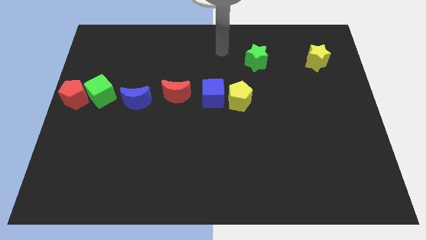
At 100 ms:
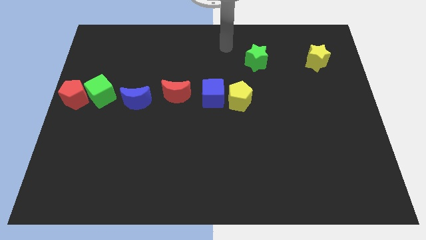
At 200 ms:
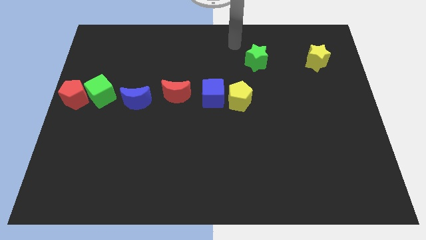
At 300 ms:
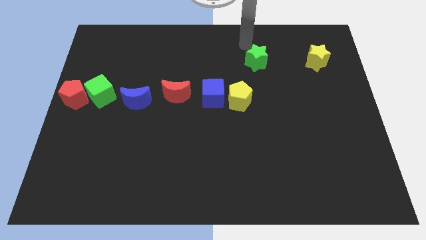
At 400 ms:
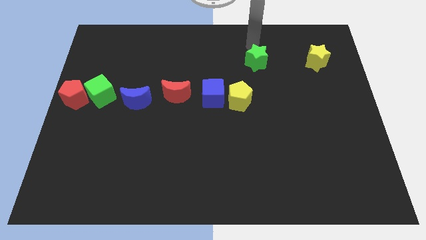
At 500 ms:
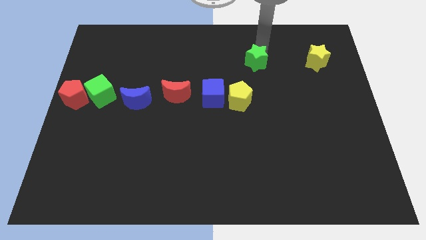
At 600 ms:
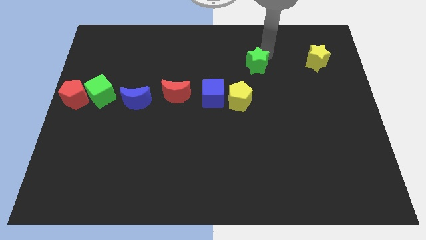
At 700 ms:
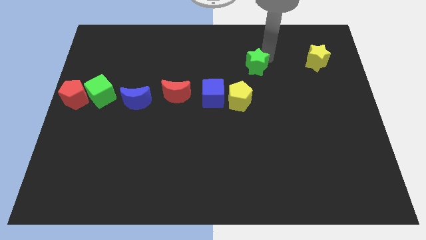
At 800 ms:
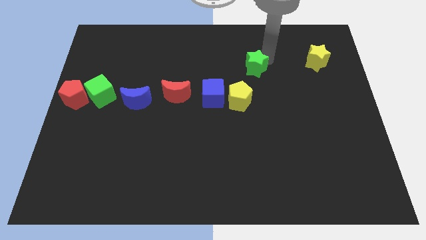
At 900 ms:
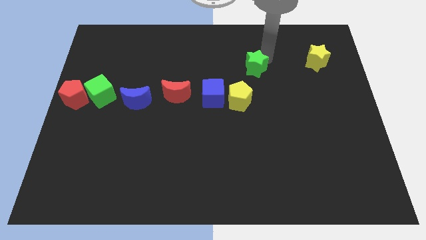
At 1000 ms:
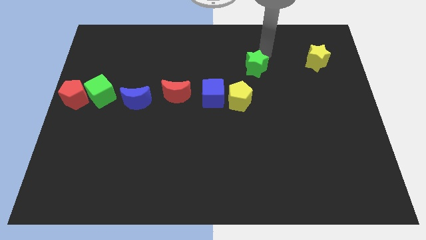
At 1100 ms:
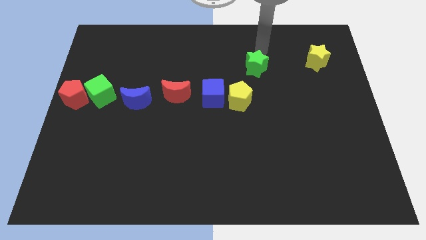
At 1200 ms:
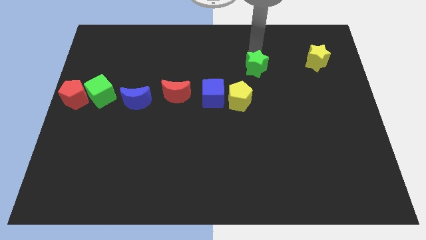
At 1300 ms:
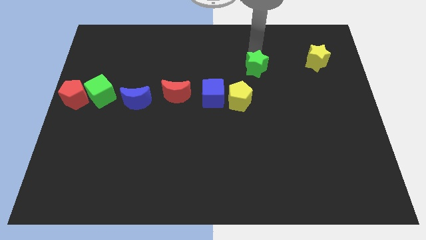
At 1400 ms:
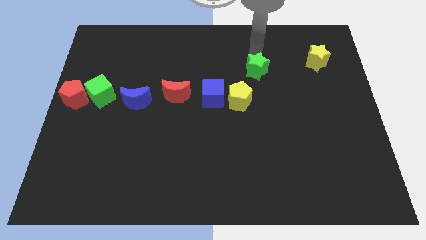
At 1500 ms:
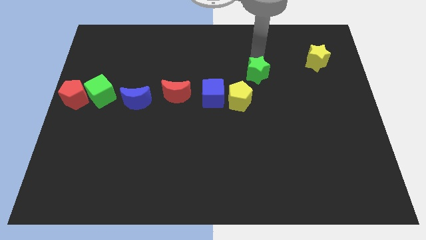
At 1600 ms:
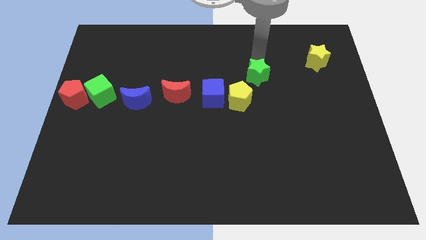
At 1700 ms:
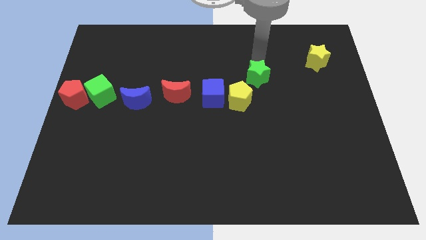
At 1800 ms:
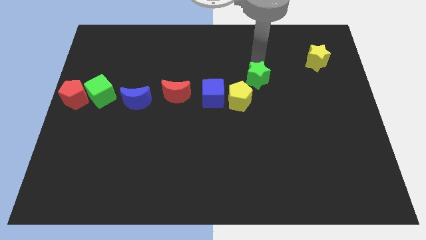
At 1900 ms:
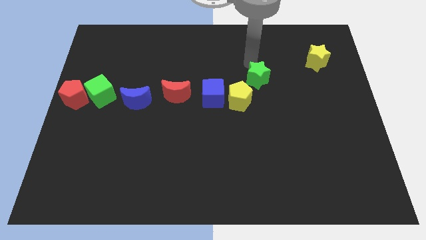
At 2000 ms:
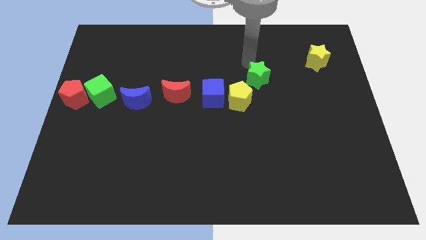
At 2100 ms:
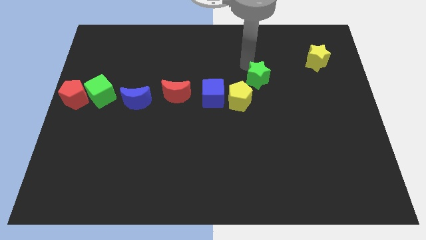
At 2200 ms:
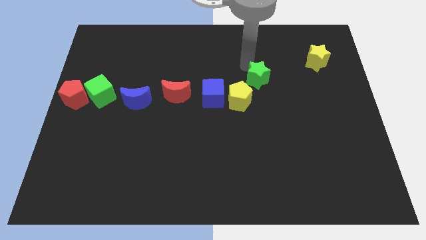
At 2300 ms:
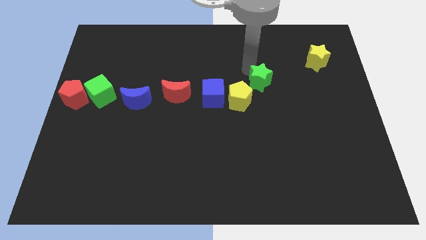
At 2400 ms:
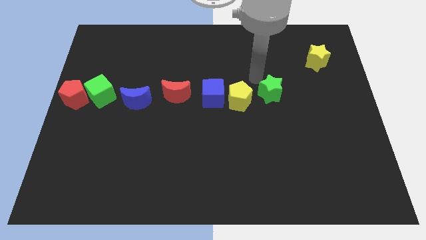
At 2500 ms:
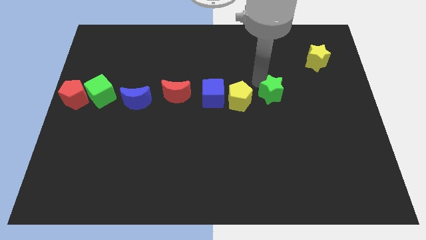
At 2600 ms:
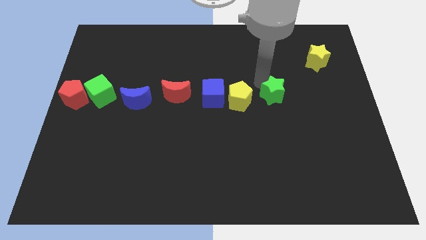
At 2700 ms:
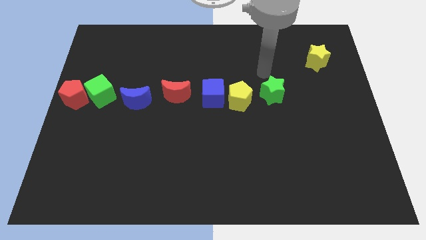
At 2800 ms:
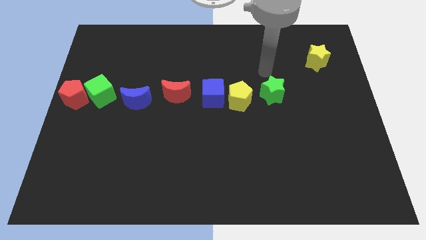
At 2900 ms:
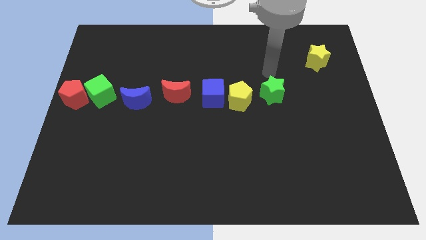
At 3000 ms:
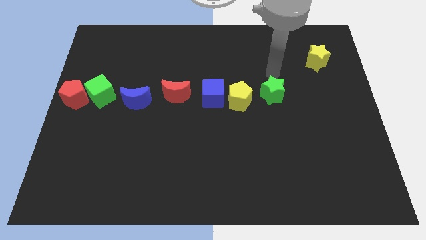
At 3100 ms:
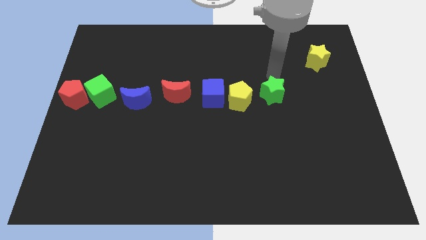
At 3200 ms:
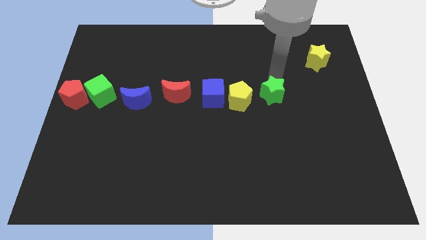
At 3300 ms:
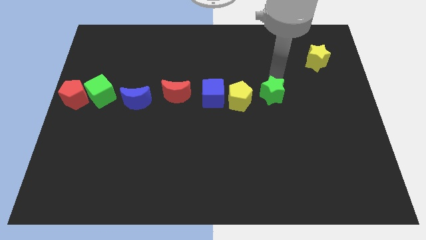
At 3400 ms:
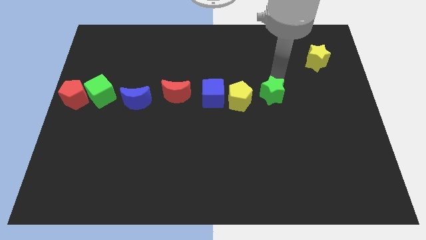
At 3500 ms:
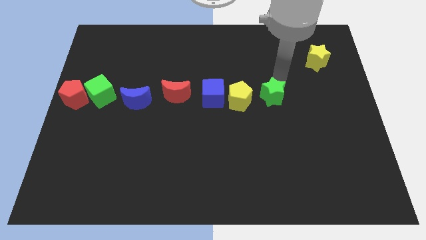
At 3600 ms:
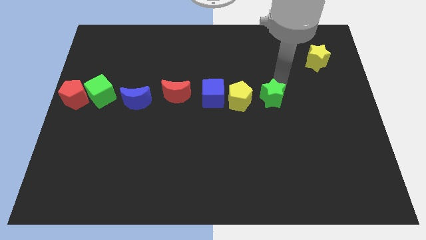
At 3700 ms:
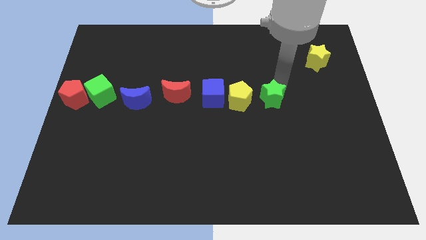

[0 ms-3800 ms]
place the green star to the right side of yellow pentagon

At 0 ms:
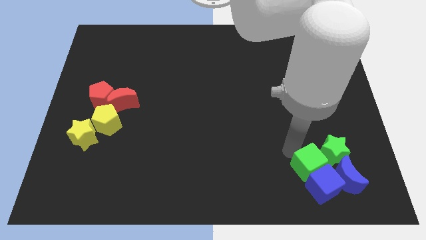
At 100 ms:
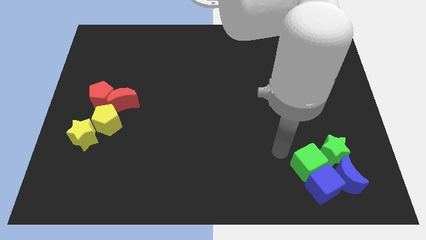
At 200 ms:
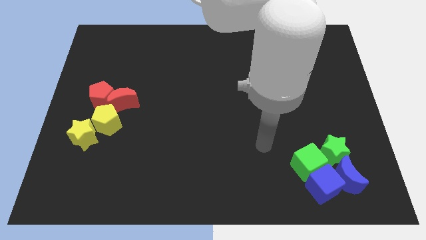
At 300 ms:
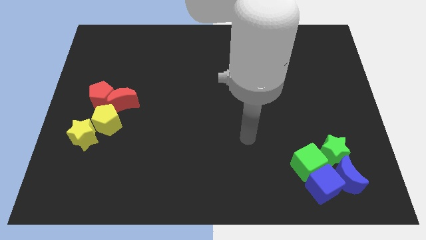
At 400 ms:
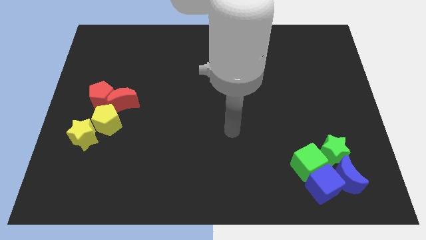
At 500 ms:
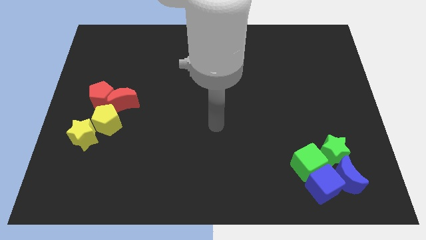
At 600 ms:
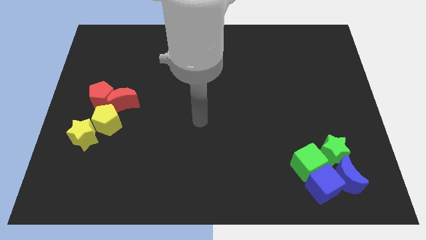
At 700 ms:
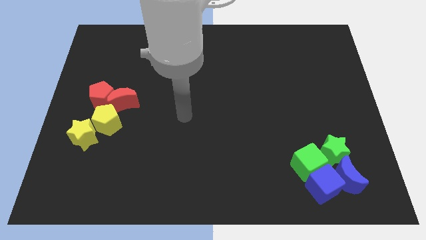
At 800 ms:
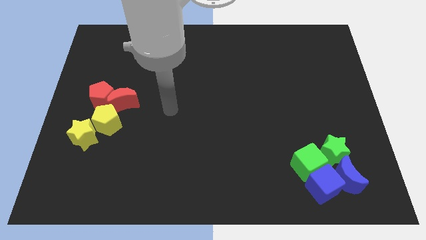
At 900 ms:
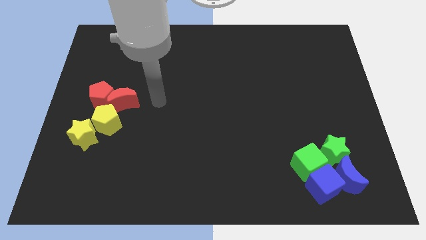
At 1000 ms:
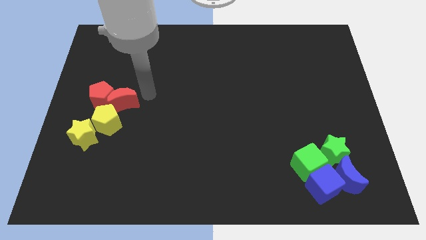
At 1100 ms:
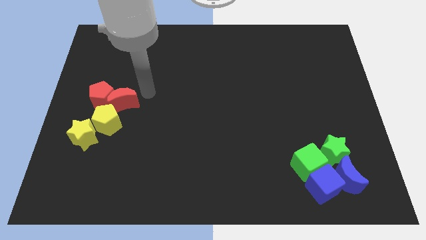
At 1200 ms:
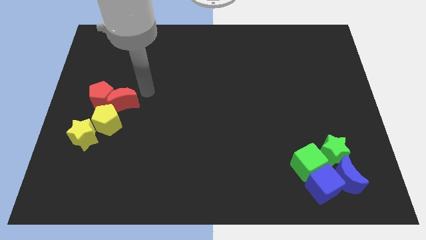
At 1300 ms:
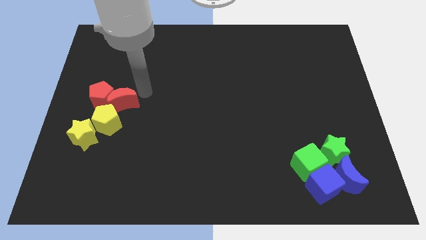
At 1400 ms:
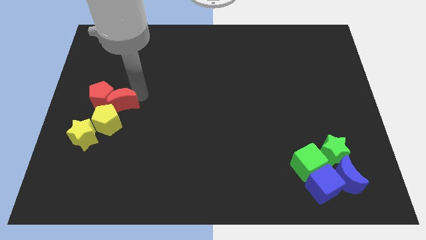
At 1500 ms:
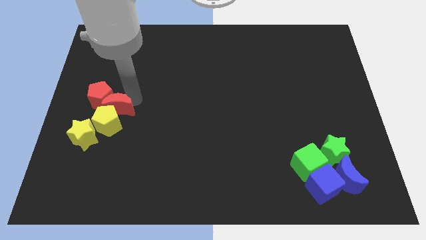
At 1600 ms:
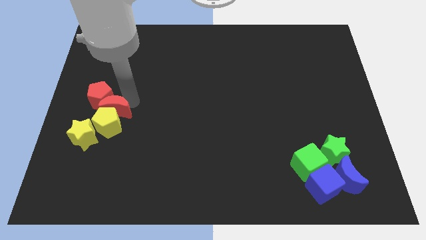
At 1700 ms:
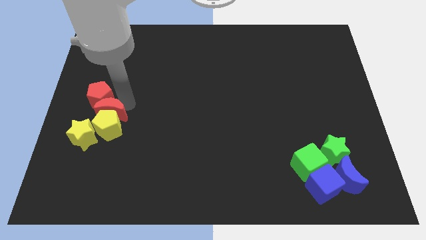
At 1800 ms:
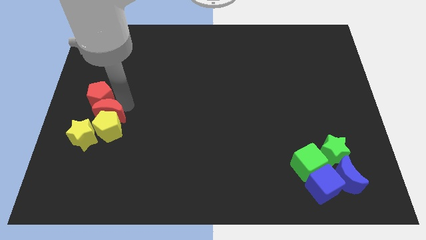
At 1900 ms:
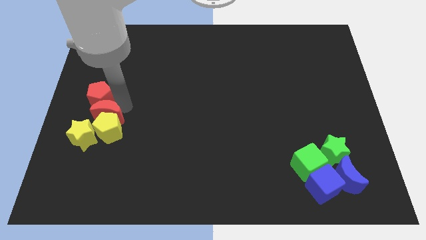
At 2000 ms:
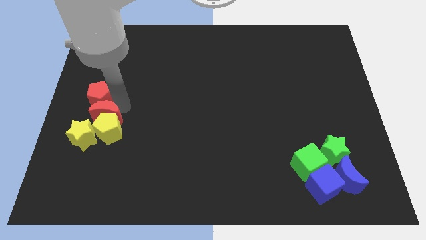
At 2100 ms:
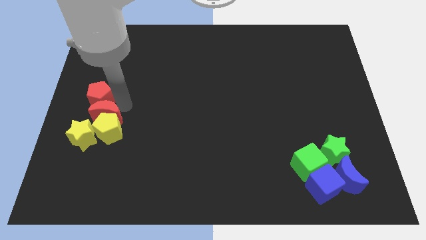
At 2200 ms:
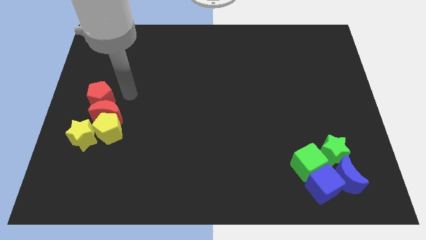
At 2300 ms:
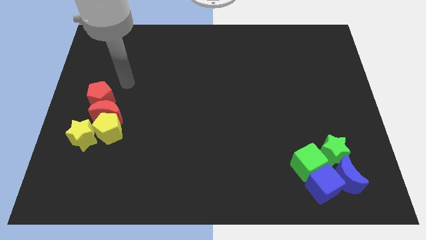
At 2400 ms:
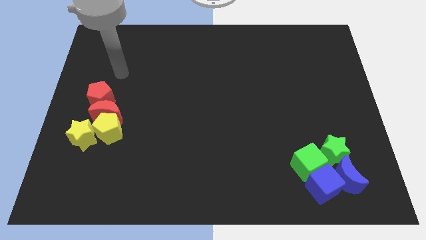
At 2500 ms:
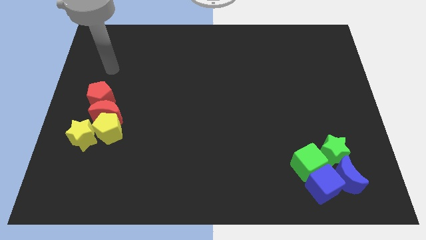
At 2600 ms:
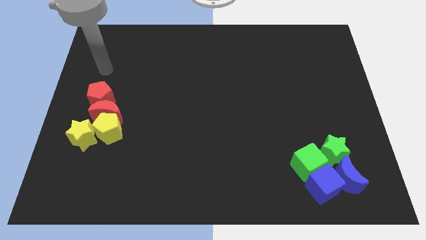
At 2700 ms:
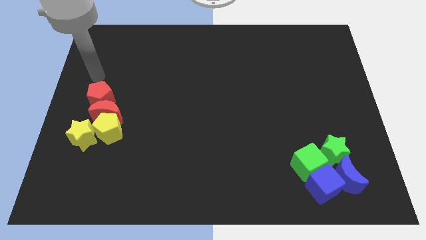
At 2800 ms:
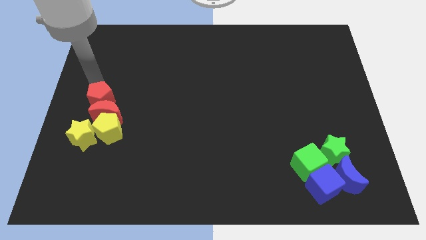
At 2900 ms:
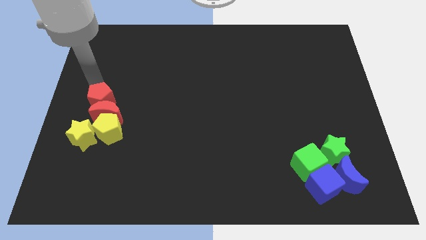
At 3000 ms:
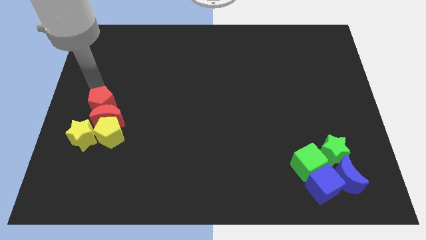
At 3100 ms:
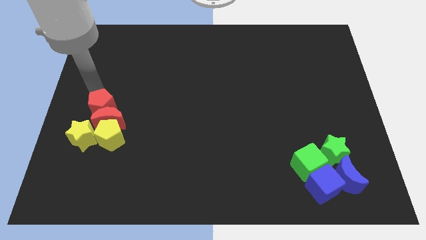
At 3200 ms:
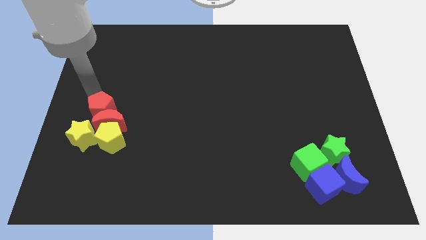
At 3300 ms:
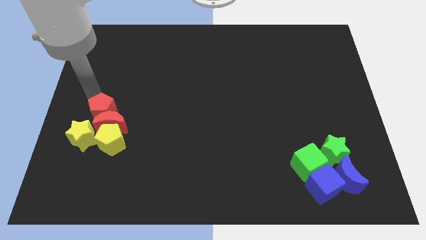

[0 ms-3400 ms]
place the red blocks to the top of yellow pentagon

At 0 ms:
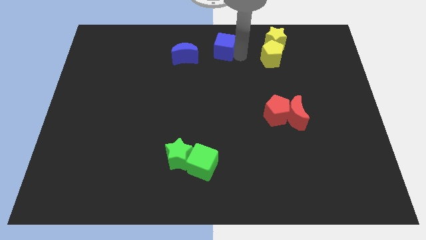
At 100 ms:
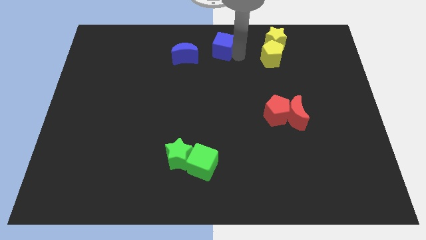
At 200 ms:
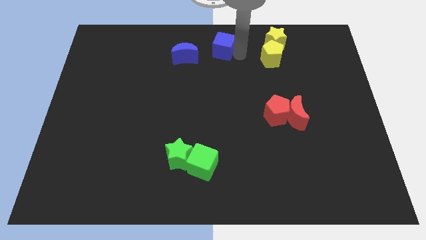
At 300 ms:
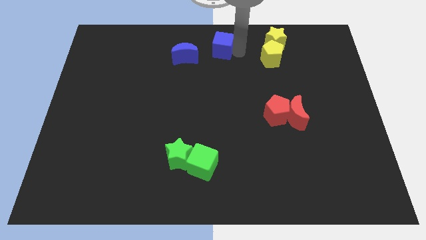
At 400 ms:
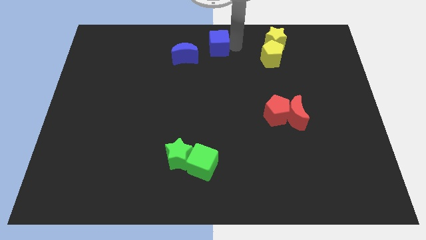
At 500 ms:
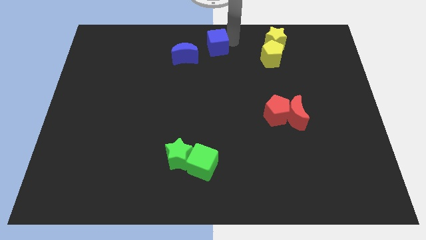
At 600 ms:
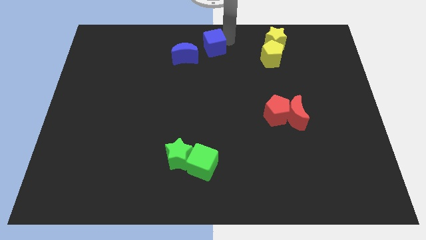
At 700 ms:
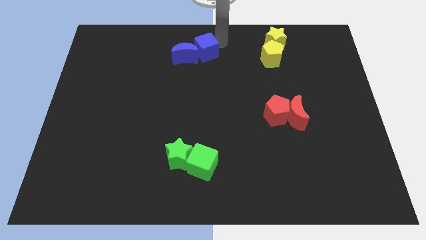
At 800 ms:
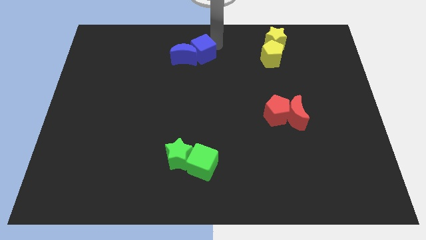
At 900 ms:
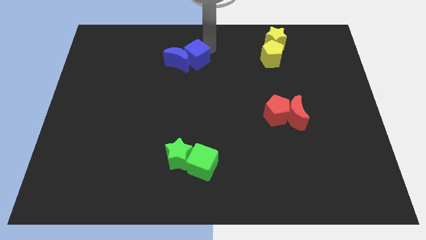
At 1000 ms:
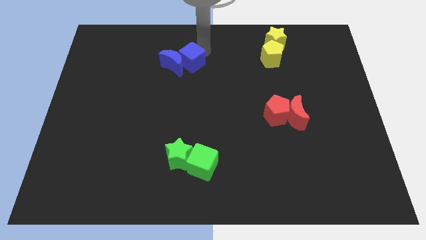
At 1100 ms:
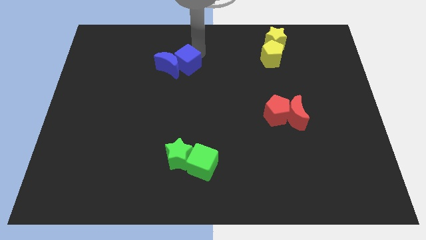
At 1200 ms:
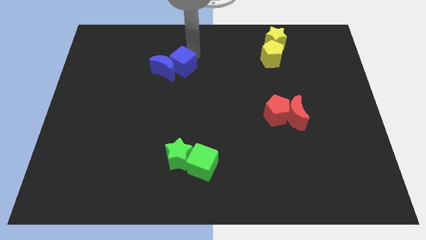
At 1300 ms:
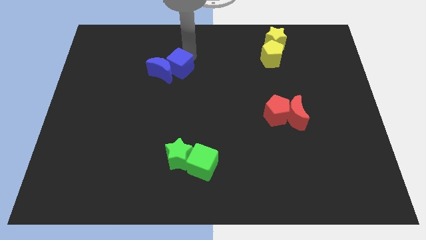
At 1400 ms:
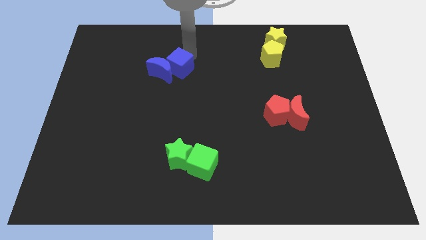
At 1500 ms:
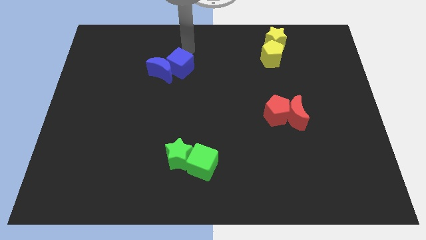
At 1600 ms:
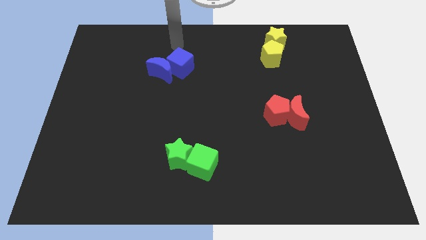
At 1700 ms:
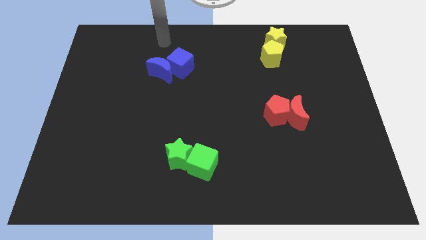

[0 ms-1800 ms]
move the blue blocks towards the bottom

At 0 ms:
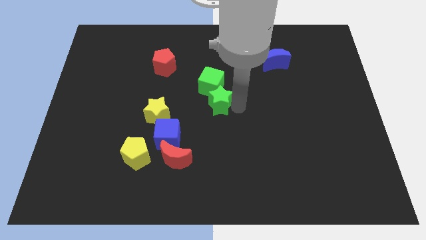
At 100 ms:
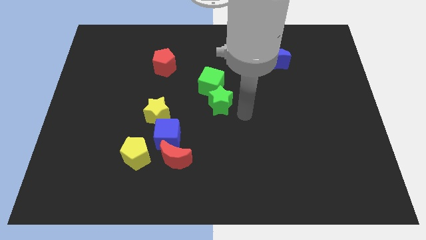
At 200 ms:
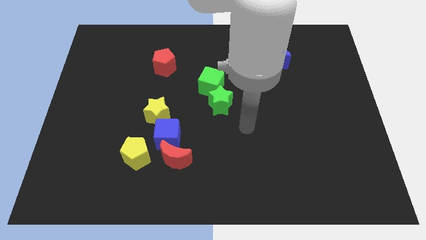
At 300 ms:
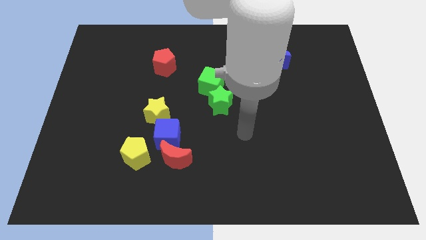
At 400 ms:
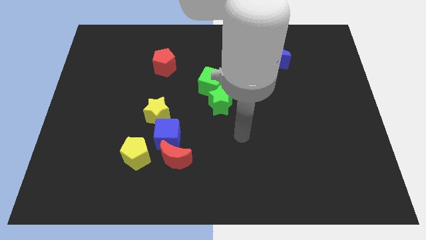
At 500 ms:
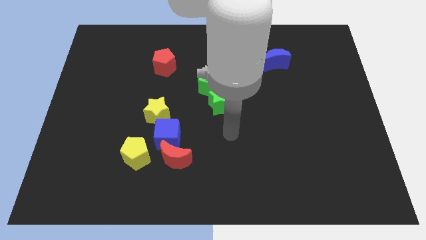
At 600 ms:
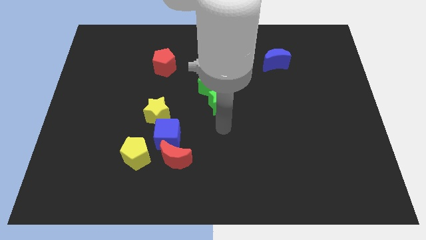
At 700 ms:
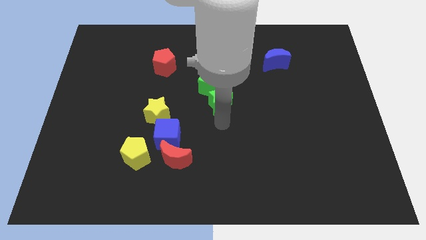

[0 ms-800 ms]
move green star in center
